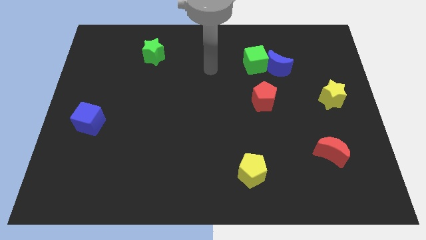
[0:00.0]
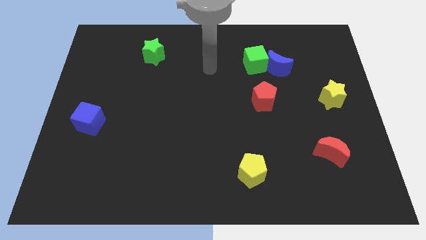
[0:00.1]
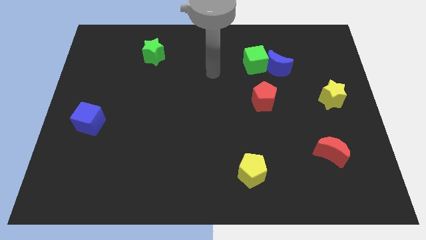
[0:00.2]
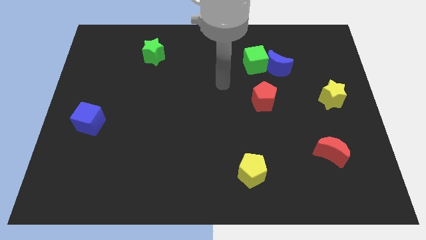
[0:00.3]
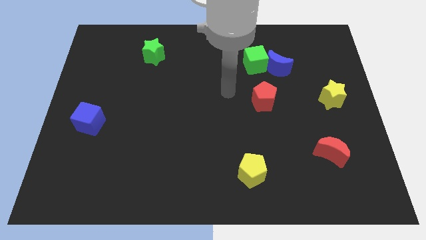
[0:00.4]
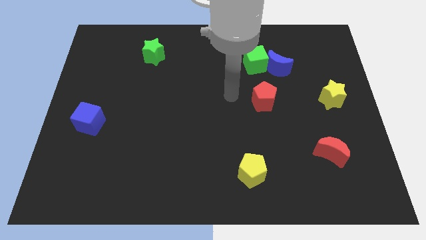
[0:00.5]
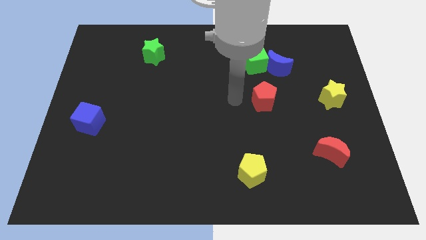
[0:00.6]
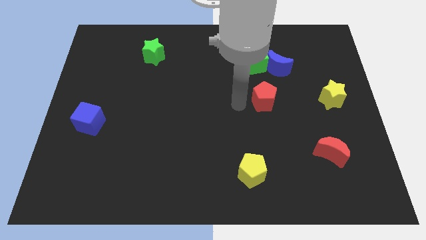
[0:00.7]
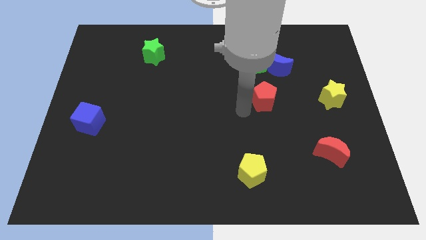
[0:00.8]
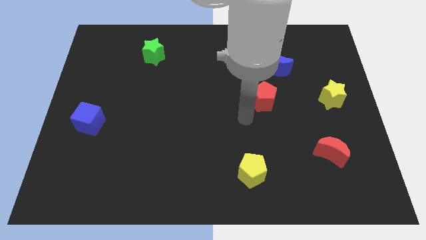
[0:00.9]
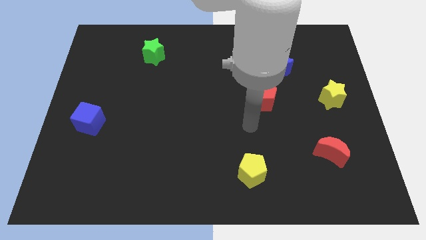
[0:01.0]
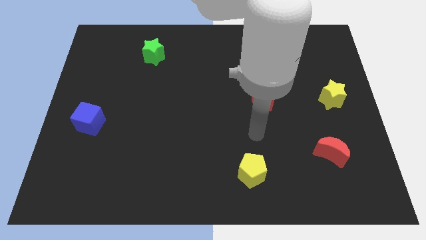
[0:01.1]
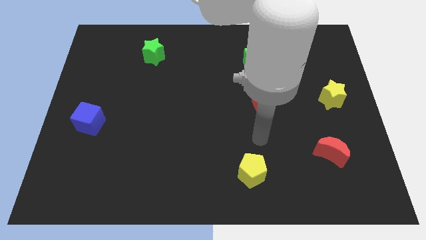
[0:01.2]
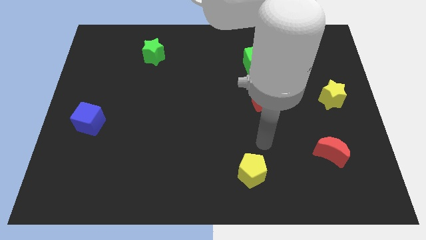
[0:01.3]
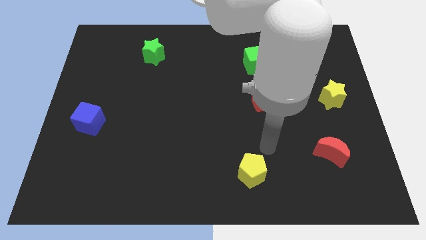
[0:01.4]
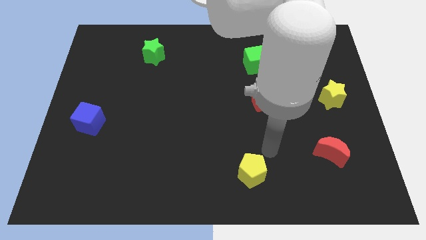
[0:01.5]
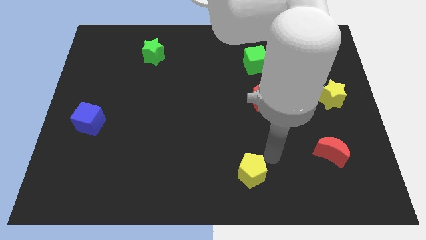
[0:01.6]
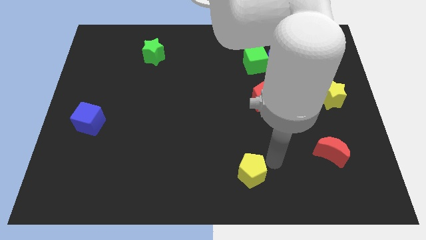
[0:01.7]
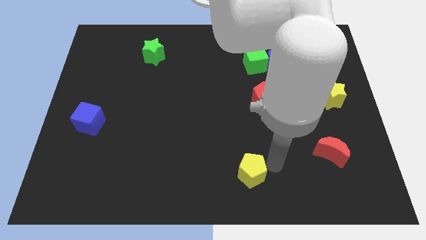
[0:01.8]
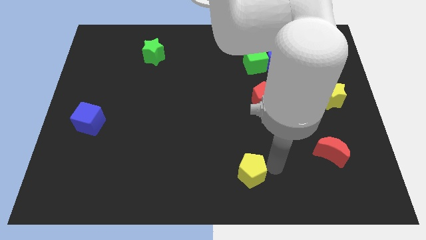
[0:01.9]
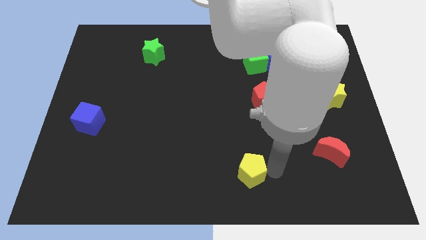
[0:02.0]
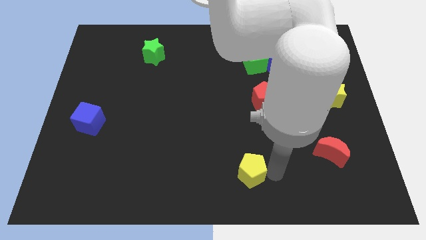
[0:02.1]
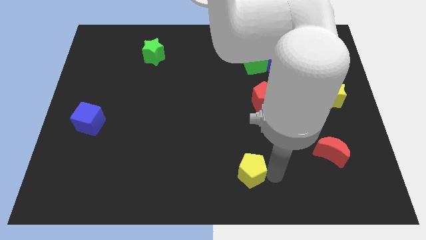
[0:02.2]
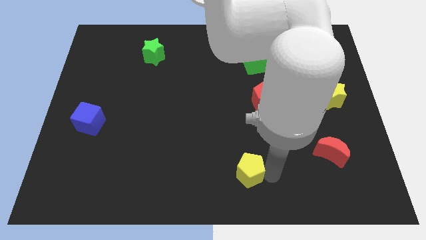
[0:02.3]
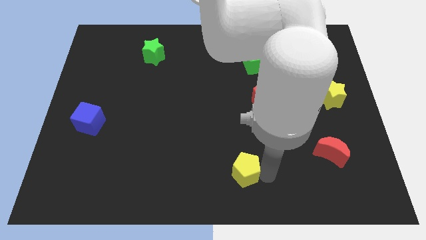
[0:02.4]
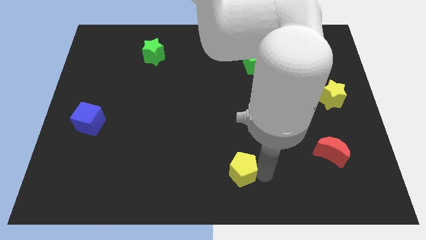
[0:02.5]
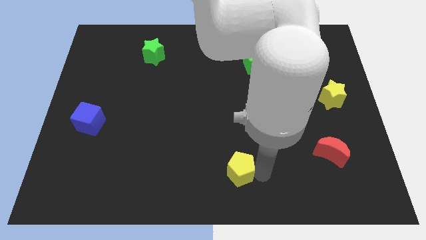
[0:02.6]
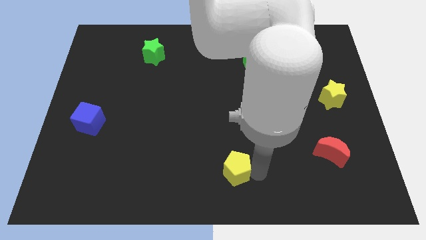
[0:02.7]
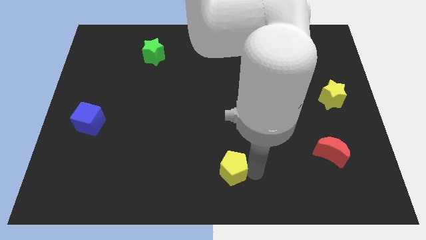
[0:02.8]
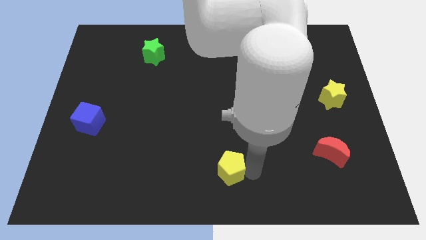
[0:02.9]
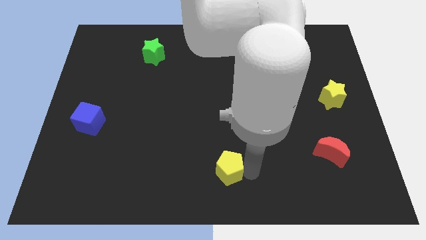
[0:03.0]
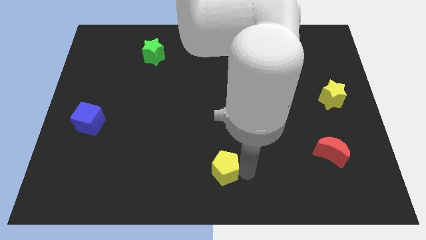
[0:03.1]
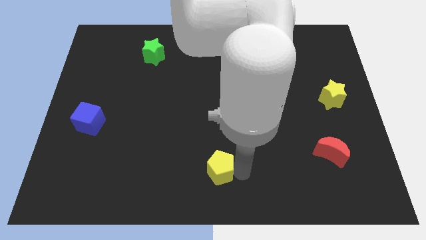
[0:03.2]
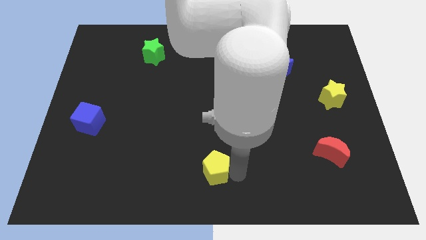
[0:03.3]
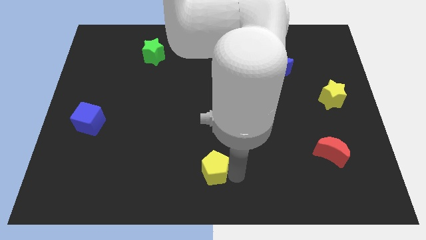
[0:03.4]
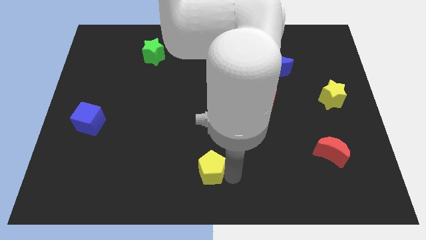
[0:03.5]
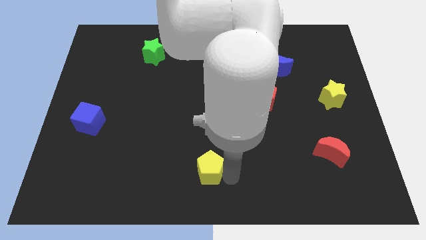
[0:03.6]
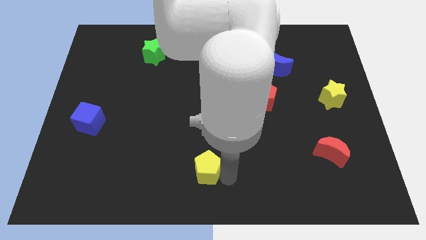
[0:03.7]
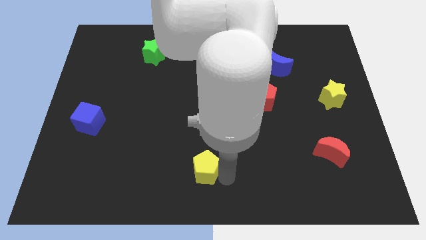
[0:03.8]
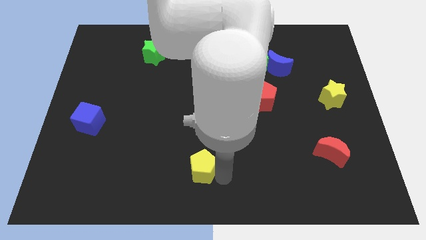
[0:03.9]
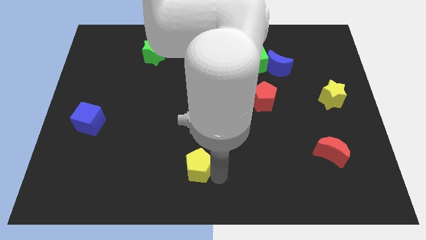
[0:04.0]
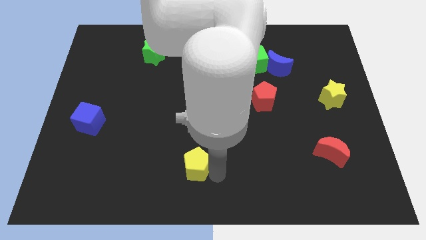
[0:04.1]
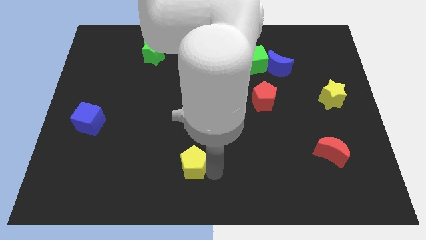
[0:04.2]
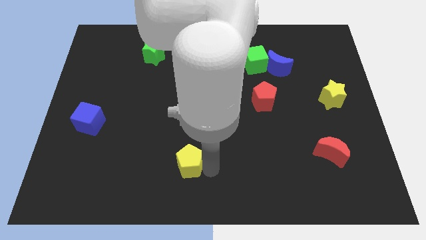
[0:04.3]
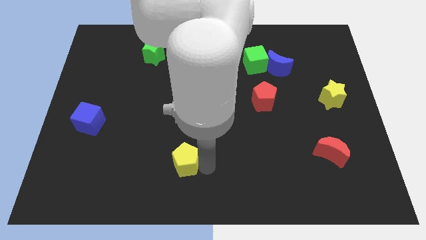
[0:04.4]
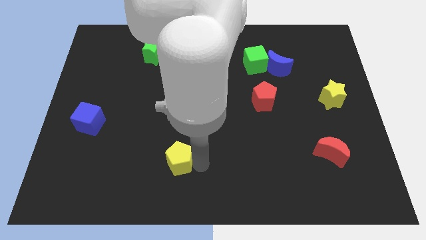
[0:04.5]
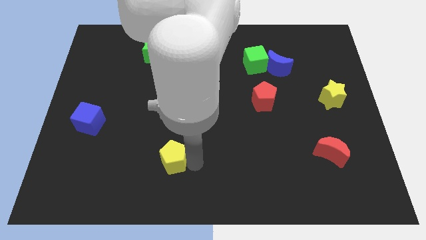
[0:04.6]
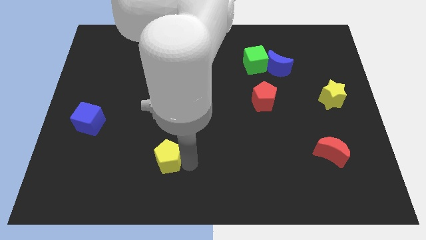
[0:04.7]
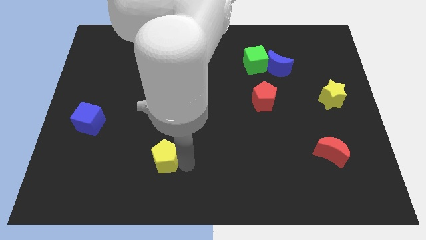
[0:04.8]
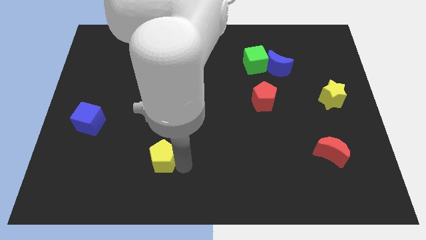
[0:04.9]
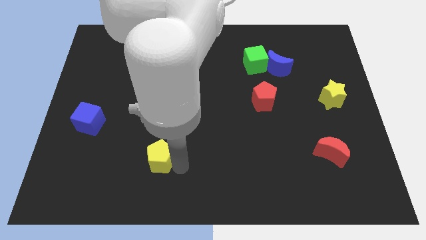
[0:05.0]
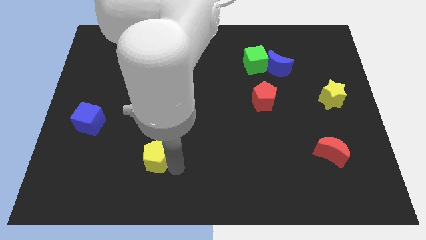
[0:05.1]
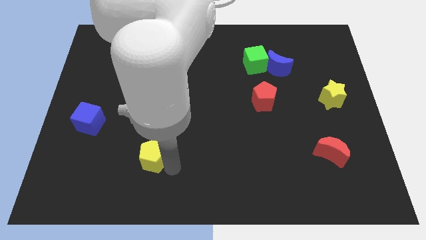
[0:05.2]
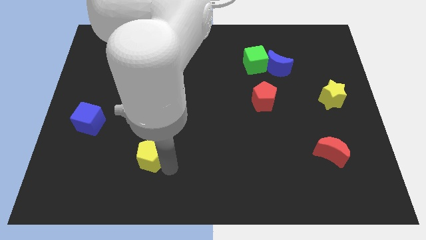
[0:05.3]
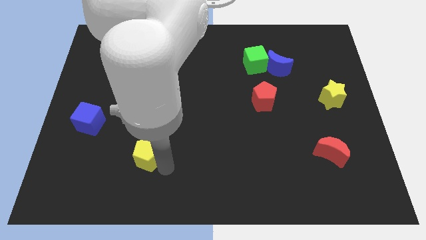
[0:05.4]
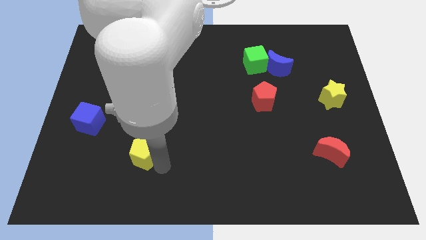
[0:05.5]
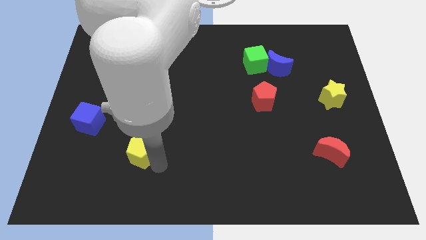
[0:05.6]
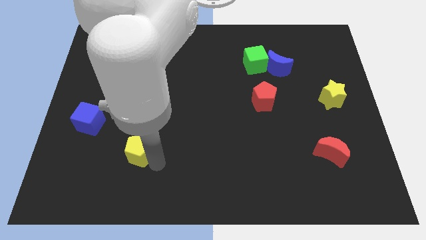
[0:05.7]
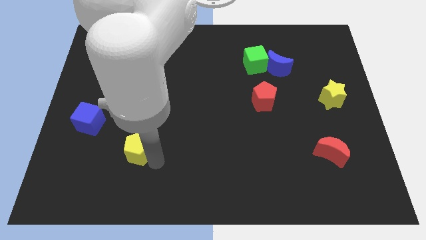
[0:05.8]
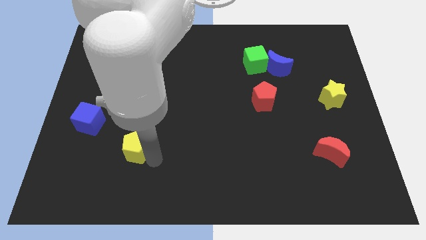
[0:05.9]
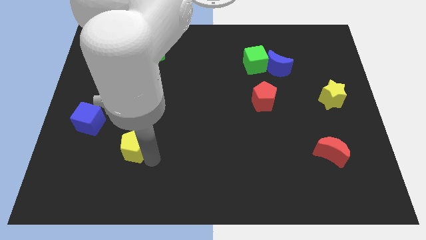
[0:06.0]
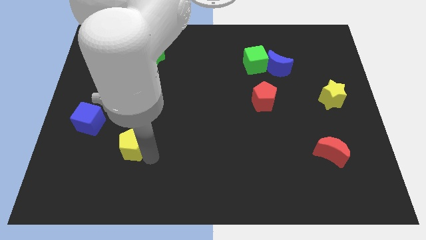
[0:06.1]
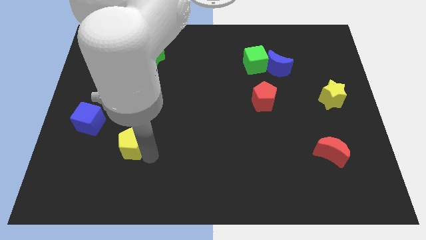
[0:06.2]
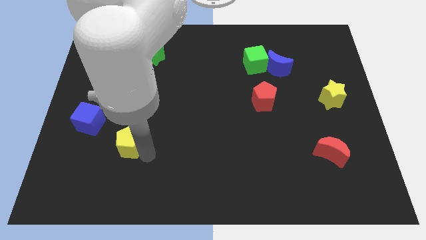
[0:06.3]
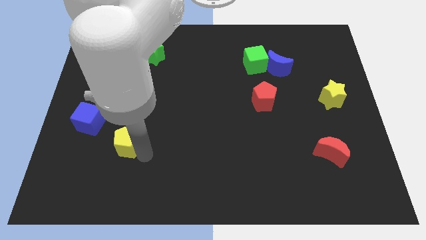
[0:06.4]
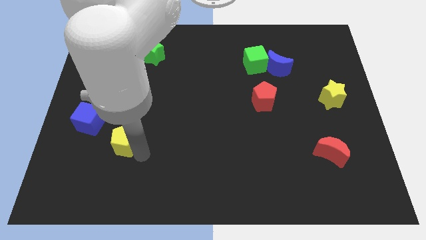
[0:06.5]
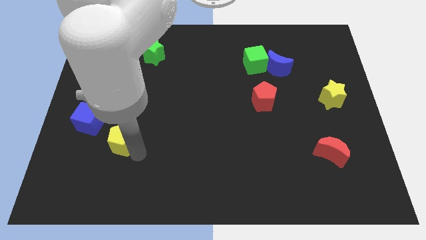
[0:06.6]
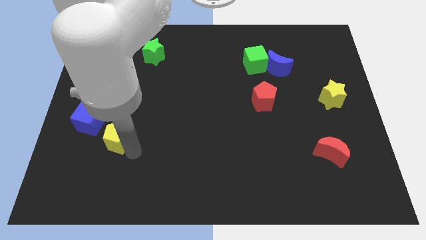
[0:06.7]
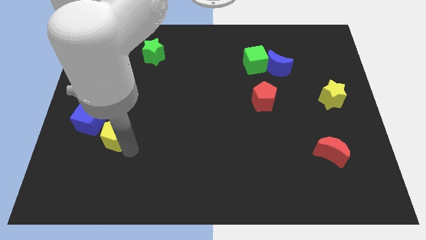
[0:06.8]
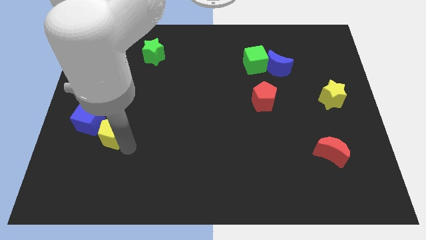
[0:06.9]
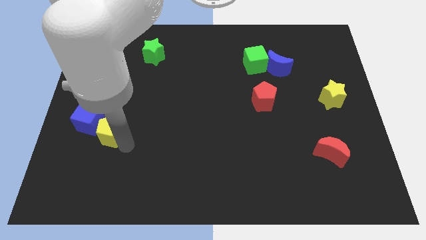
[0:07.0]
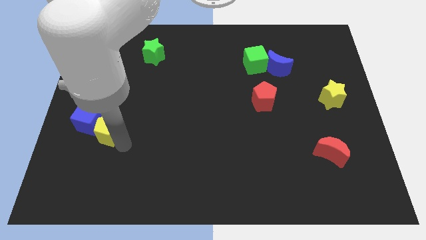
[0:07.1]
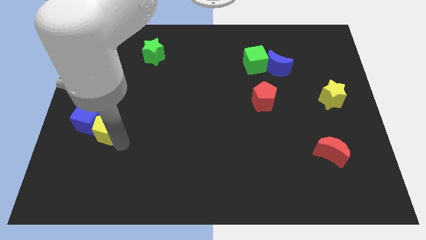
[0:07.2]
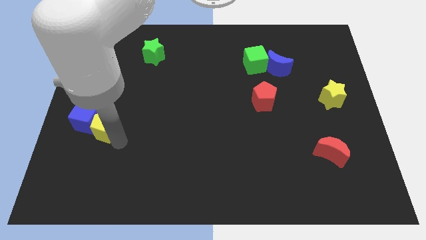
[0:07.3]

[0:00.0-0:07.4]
put the yellow pentagon close to the blue cube

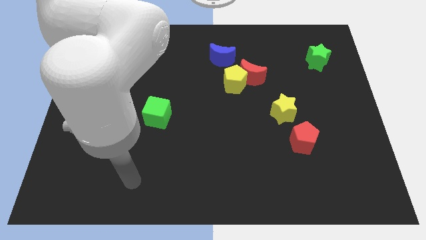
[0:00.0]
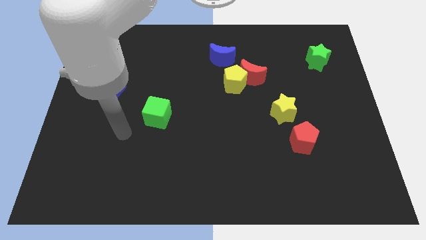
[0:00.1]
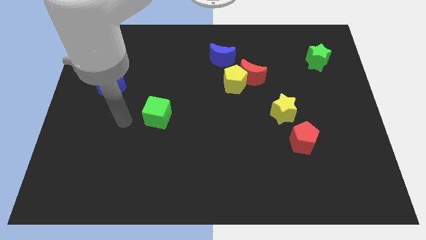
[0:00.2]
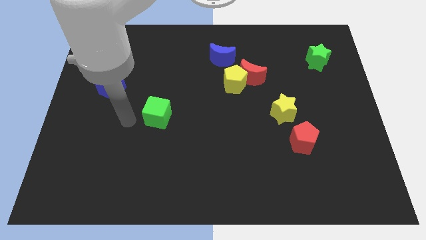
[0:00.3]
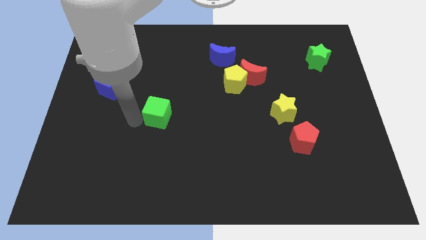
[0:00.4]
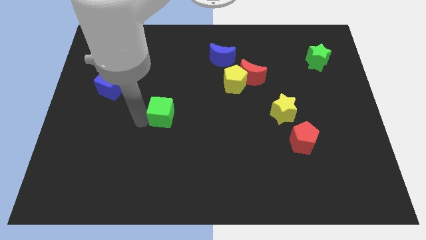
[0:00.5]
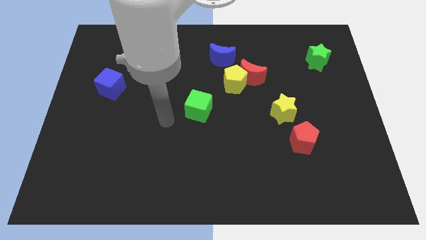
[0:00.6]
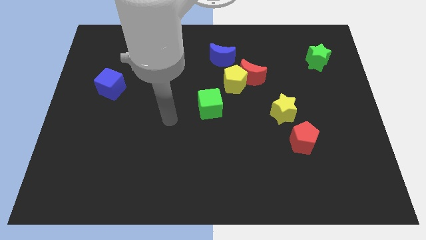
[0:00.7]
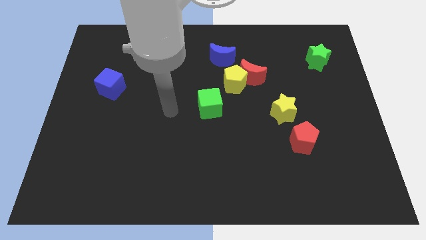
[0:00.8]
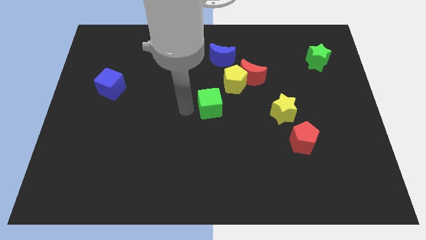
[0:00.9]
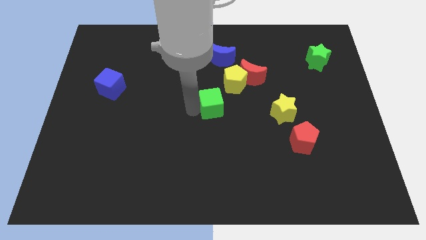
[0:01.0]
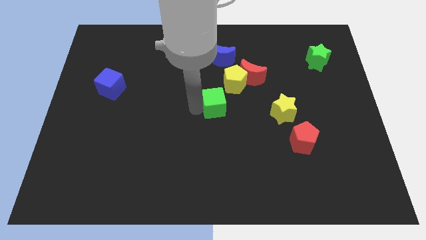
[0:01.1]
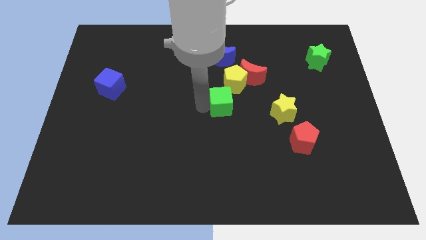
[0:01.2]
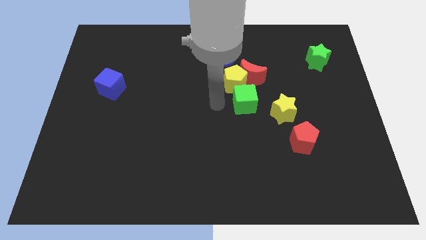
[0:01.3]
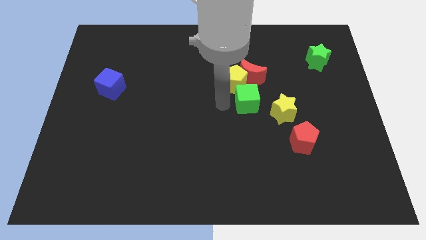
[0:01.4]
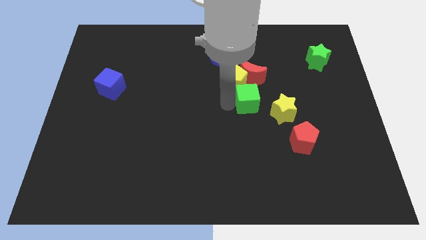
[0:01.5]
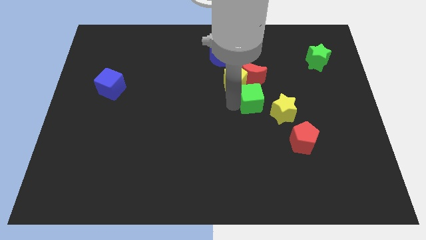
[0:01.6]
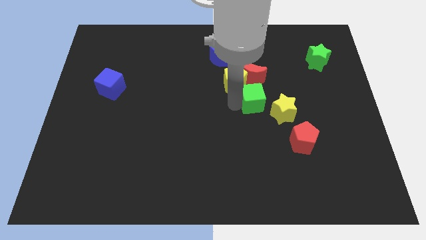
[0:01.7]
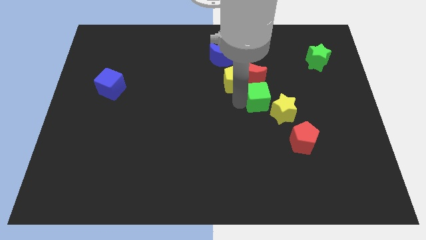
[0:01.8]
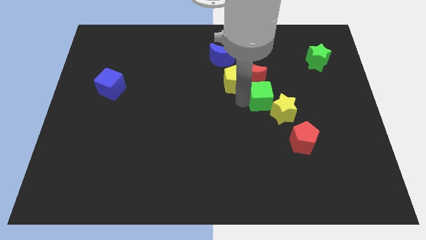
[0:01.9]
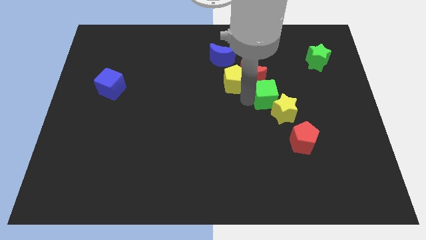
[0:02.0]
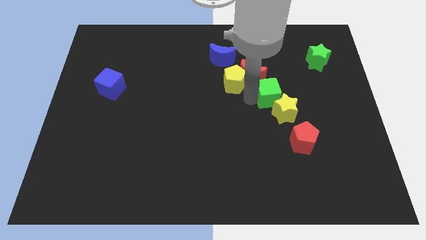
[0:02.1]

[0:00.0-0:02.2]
slide the green cube close to the yellow star
